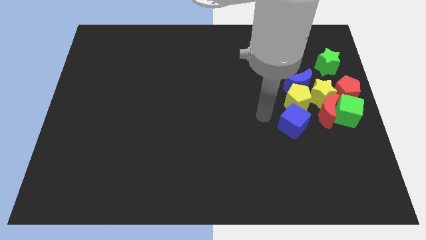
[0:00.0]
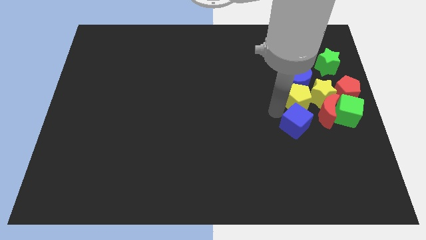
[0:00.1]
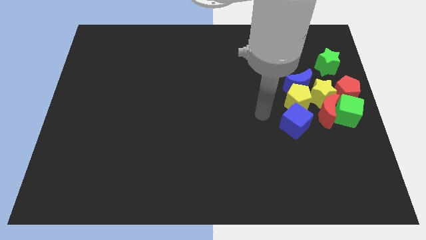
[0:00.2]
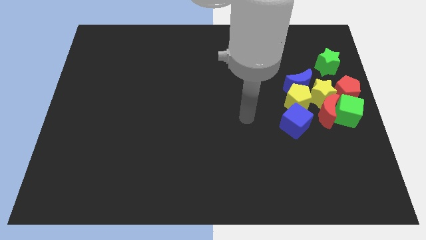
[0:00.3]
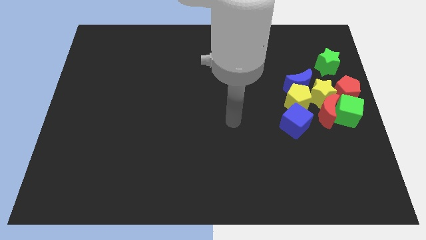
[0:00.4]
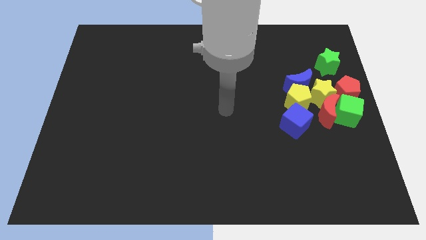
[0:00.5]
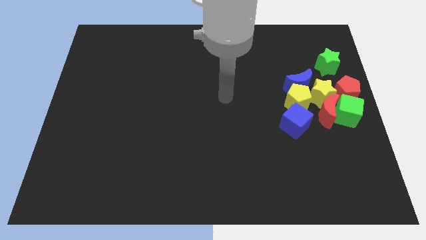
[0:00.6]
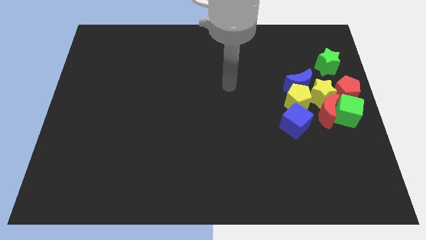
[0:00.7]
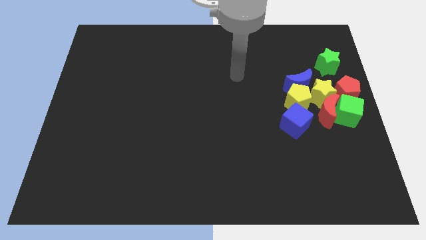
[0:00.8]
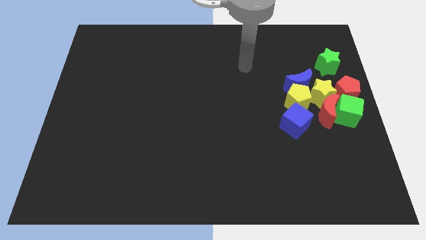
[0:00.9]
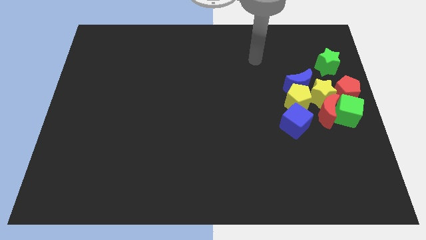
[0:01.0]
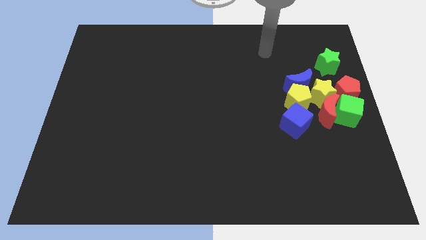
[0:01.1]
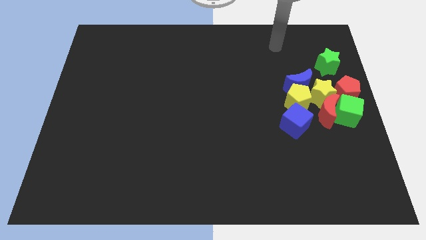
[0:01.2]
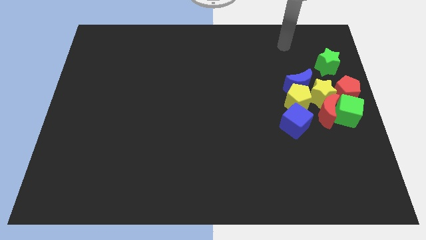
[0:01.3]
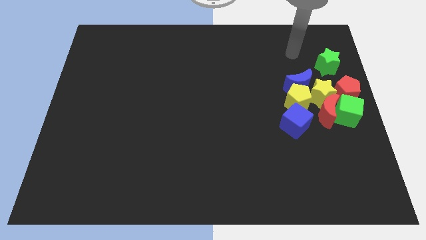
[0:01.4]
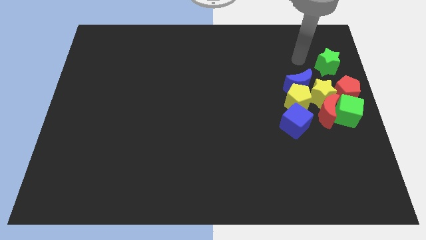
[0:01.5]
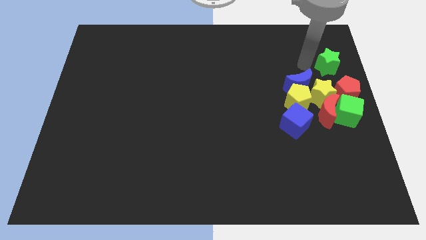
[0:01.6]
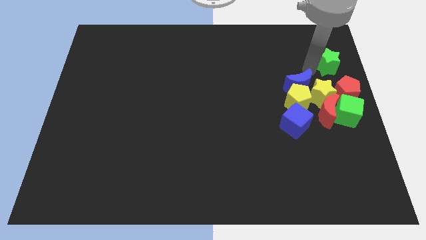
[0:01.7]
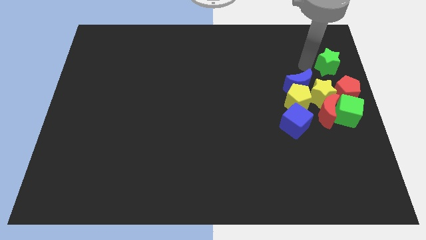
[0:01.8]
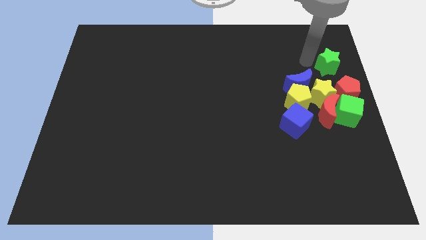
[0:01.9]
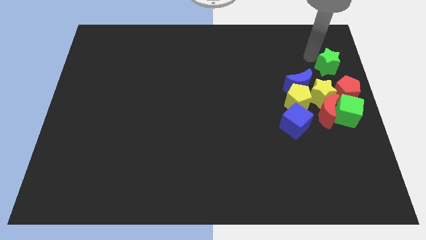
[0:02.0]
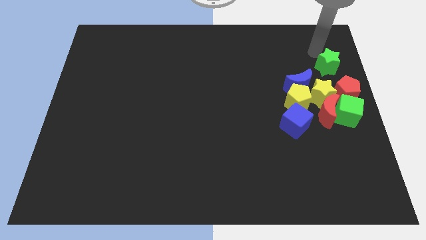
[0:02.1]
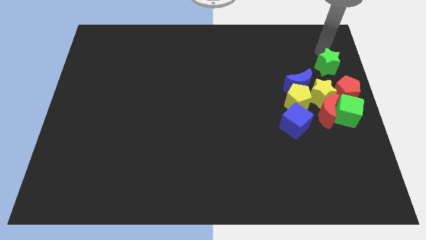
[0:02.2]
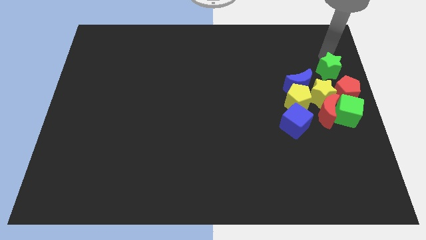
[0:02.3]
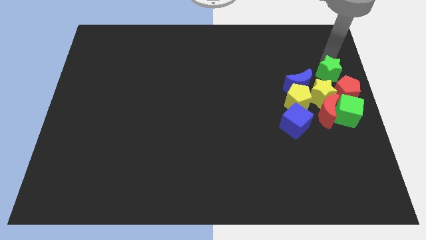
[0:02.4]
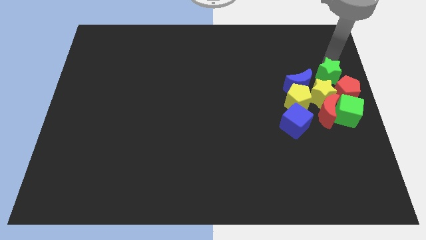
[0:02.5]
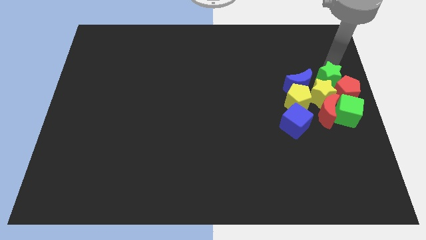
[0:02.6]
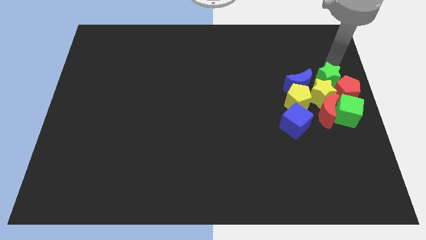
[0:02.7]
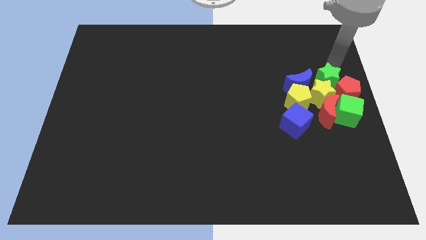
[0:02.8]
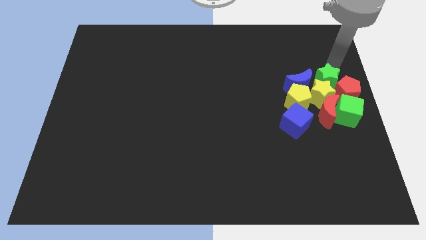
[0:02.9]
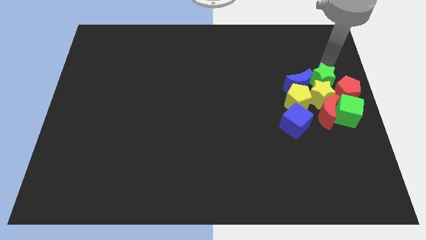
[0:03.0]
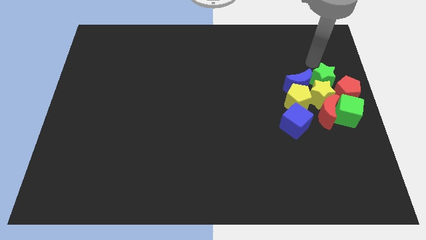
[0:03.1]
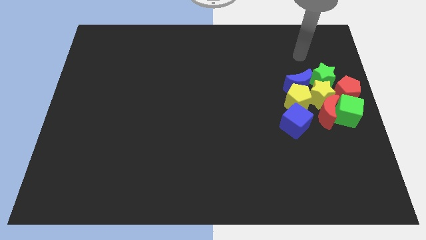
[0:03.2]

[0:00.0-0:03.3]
push the green star into the group of blocks

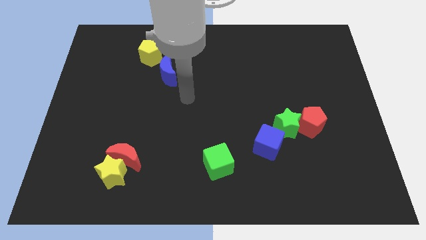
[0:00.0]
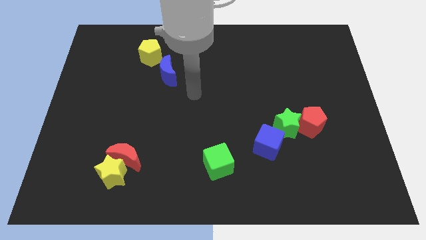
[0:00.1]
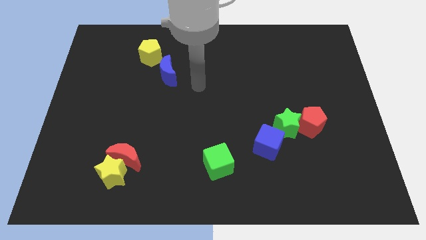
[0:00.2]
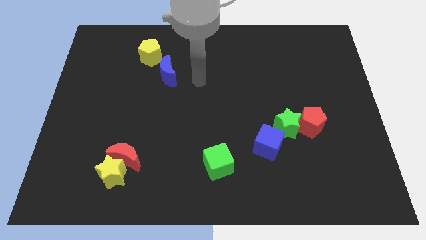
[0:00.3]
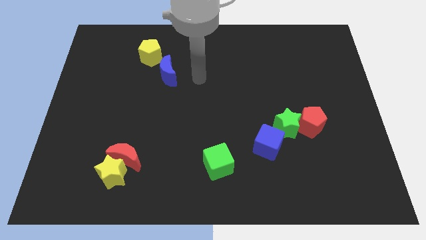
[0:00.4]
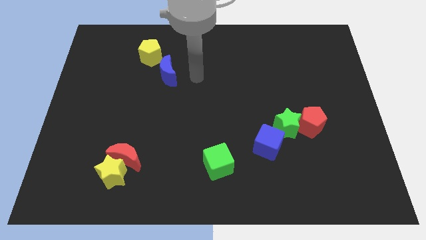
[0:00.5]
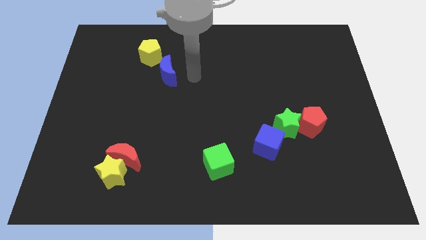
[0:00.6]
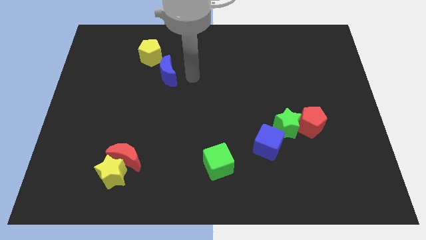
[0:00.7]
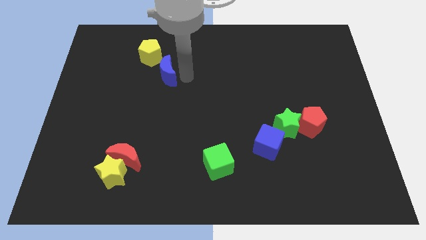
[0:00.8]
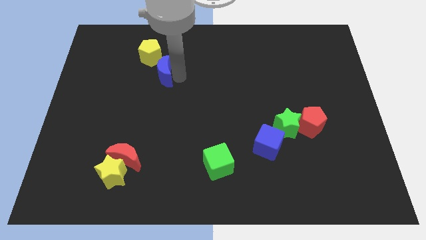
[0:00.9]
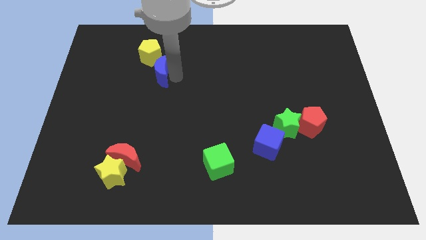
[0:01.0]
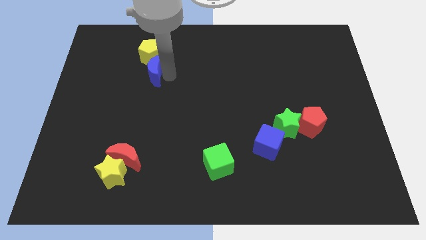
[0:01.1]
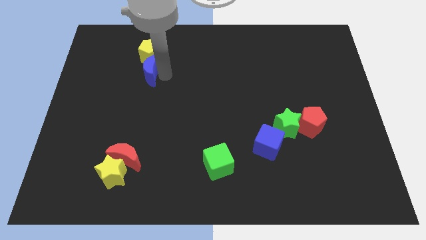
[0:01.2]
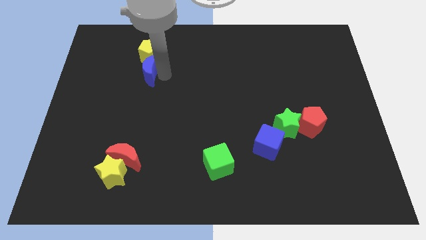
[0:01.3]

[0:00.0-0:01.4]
push the blue crescent below the yellow pentagon

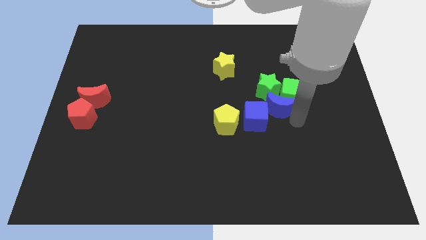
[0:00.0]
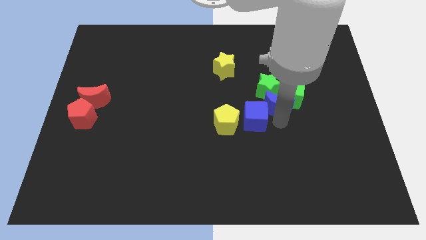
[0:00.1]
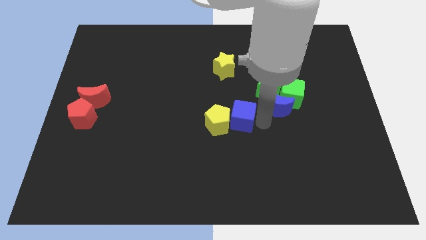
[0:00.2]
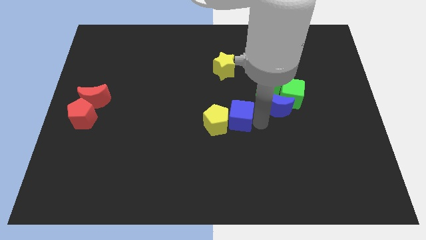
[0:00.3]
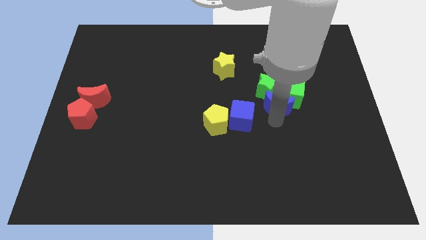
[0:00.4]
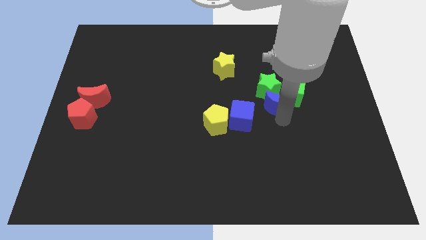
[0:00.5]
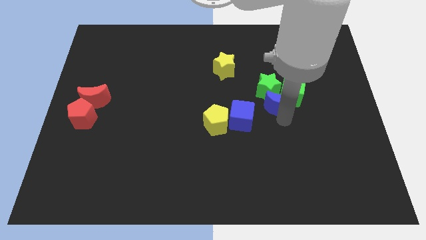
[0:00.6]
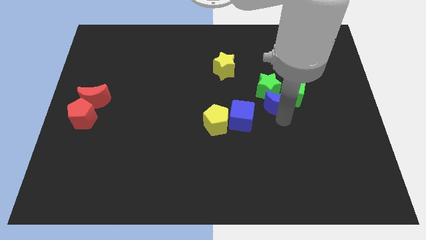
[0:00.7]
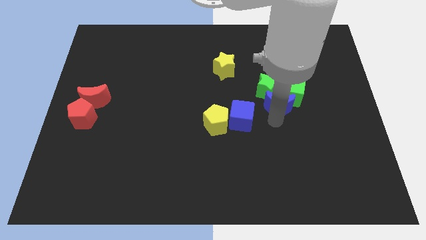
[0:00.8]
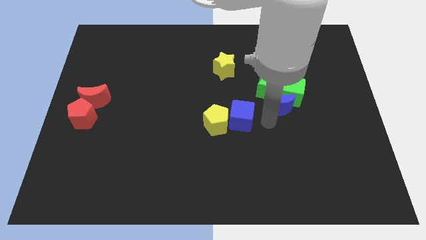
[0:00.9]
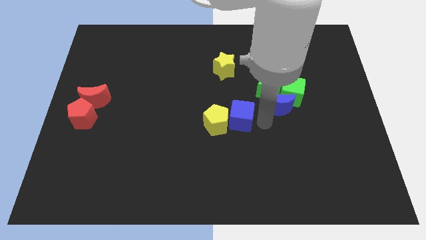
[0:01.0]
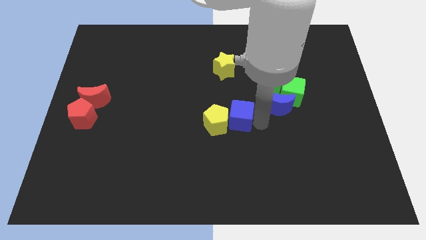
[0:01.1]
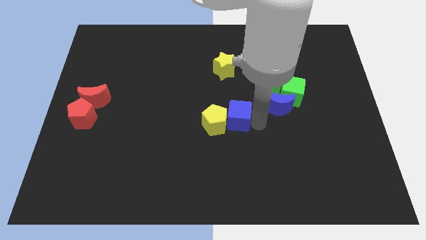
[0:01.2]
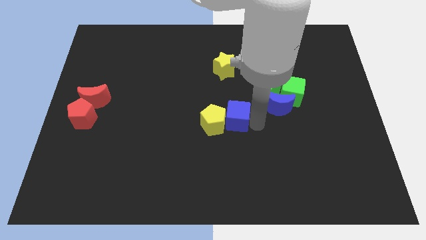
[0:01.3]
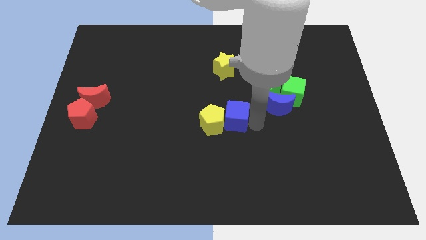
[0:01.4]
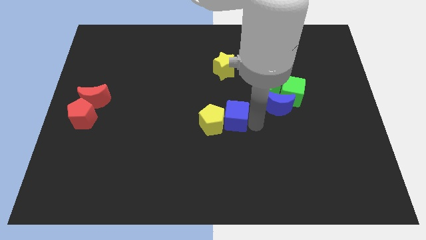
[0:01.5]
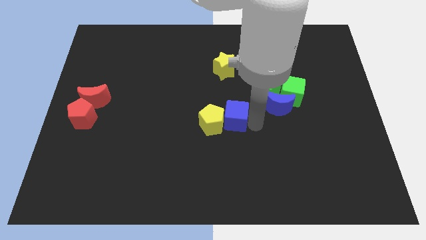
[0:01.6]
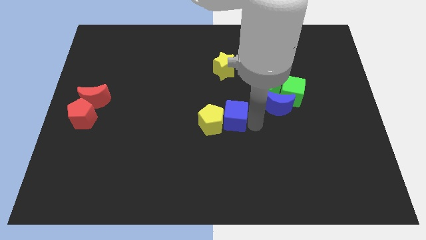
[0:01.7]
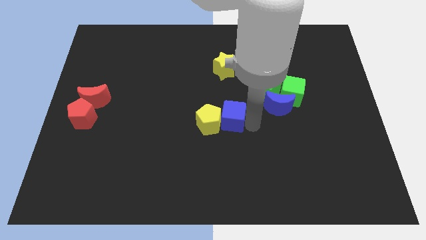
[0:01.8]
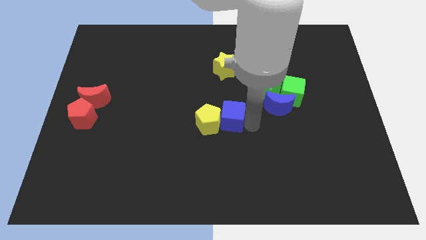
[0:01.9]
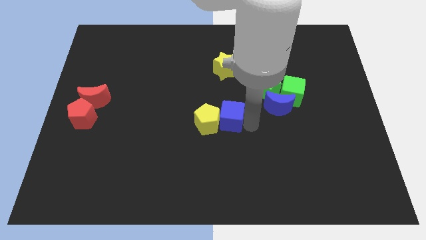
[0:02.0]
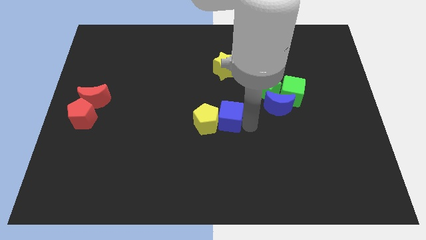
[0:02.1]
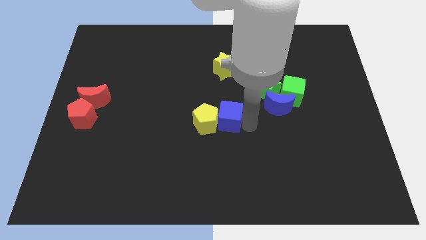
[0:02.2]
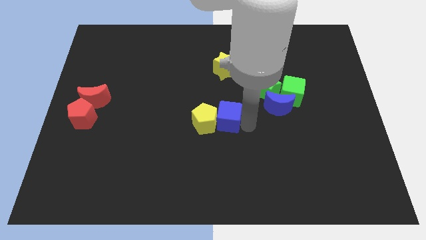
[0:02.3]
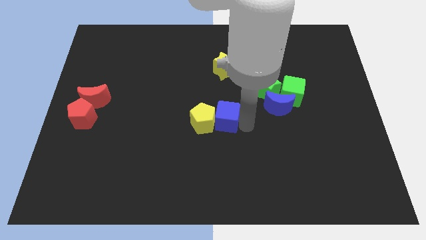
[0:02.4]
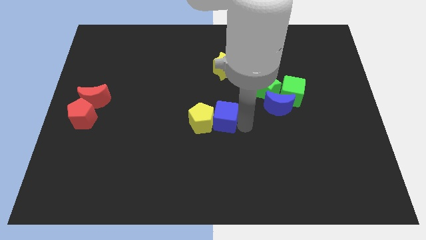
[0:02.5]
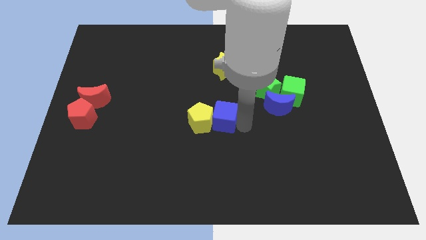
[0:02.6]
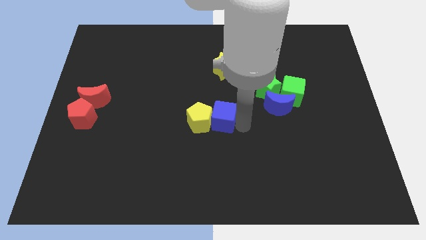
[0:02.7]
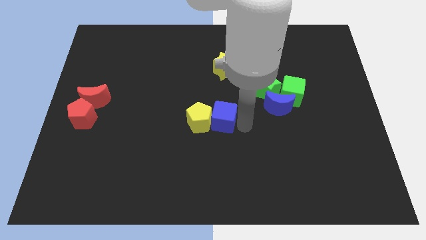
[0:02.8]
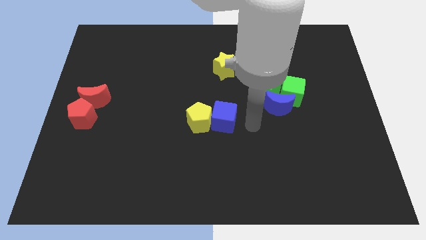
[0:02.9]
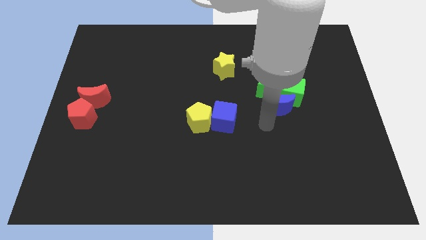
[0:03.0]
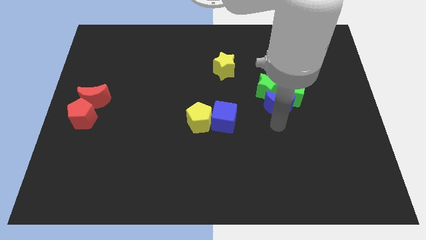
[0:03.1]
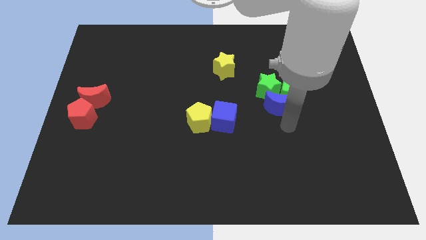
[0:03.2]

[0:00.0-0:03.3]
separate the blue cube from blue crescent

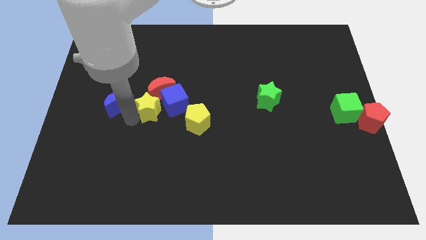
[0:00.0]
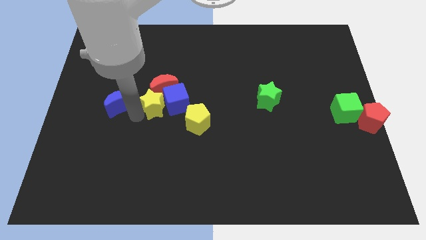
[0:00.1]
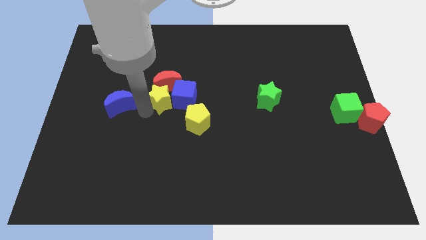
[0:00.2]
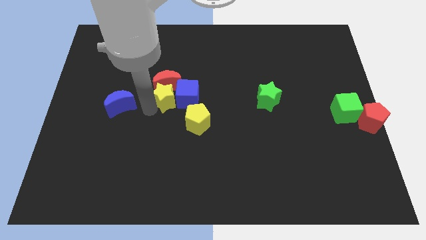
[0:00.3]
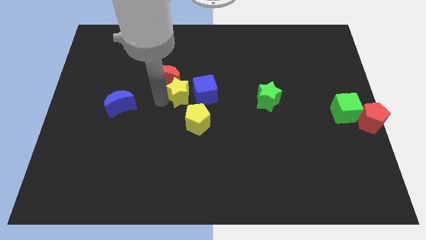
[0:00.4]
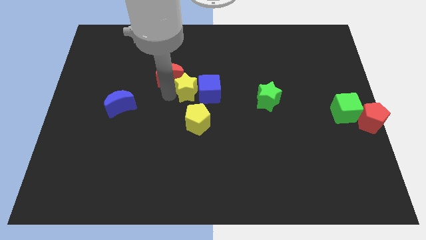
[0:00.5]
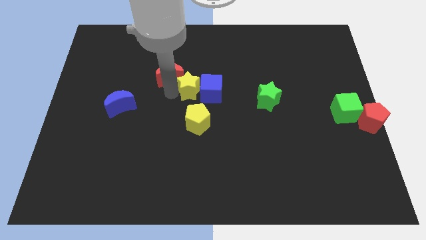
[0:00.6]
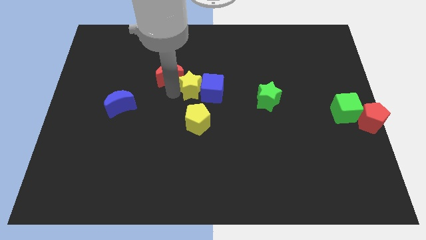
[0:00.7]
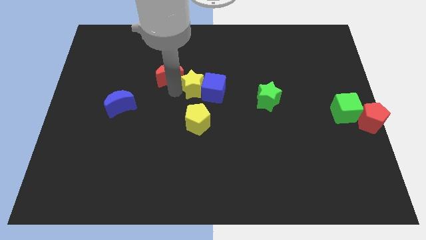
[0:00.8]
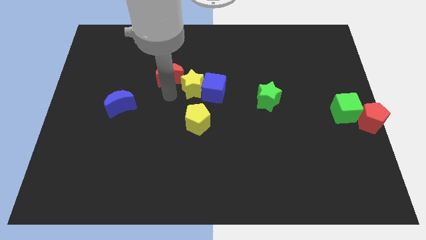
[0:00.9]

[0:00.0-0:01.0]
push the yellow star into the blue cube
